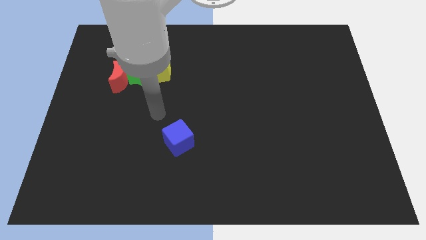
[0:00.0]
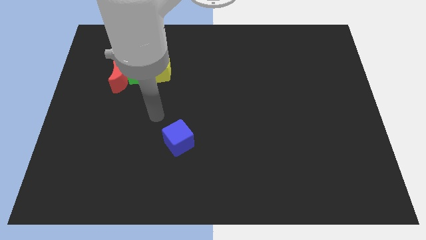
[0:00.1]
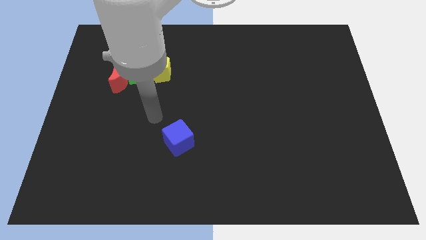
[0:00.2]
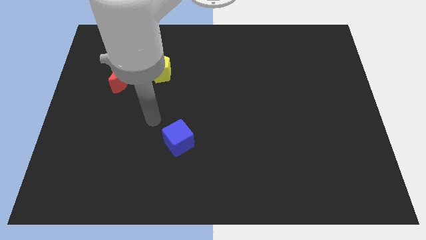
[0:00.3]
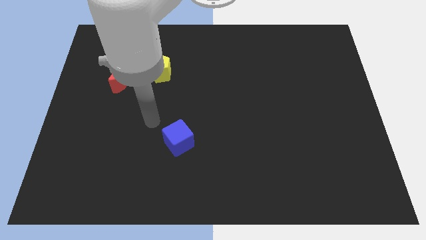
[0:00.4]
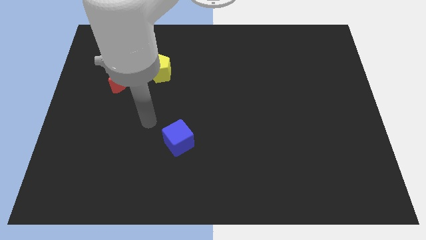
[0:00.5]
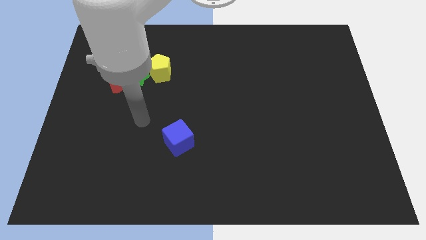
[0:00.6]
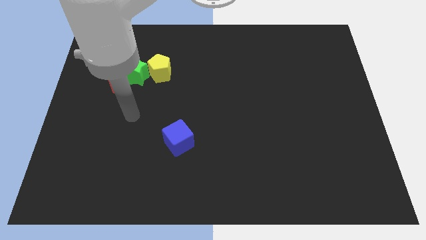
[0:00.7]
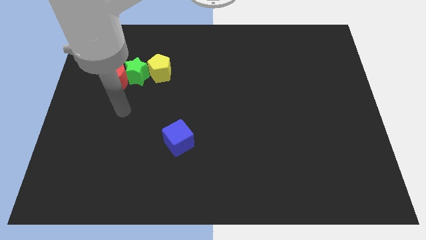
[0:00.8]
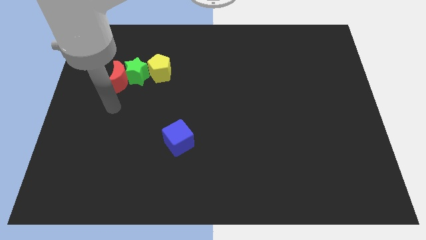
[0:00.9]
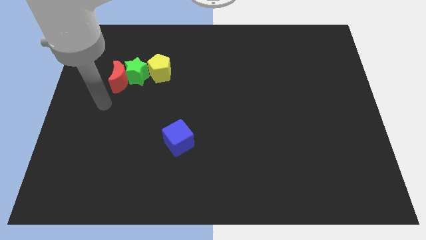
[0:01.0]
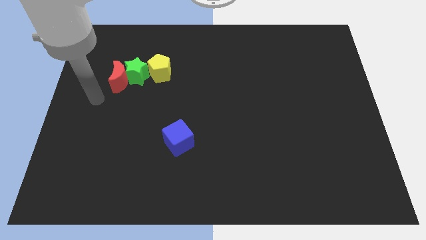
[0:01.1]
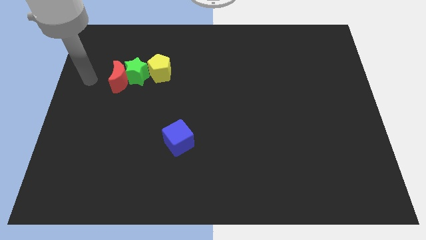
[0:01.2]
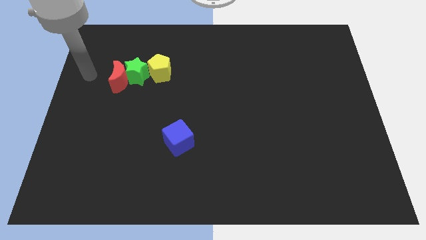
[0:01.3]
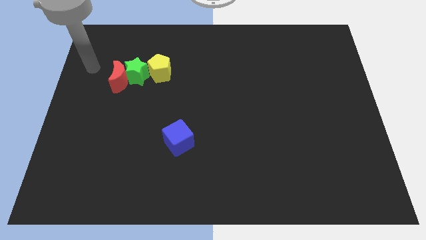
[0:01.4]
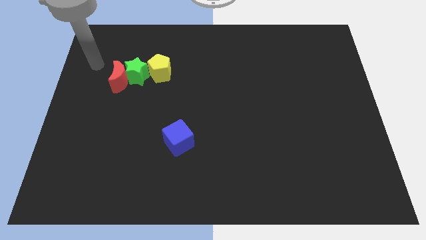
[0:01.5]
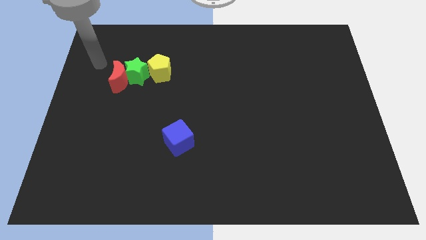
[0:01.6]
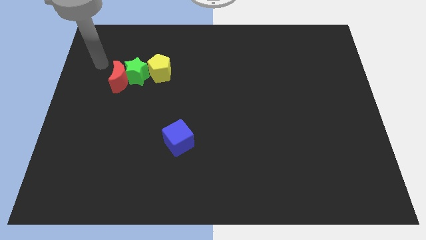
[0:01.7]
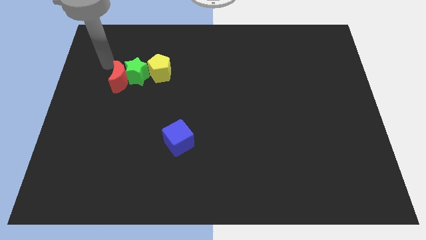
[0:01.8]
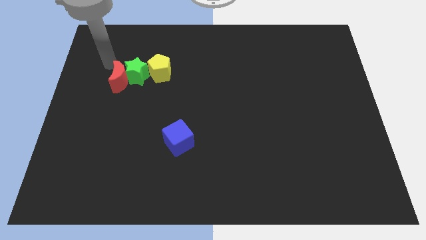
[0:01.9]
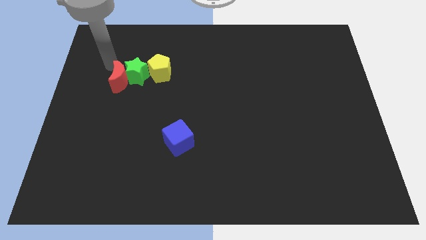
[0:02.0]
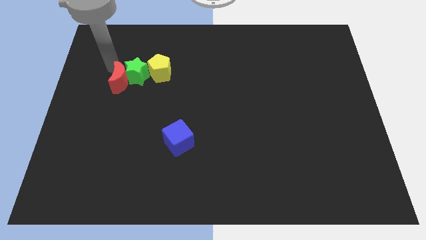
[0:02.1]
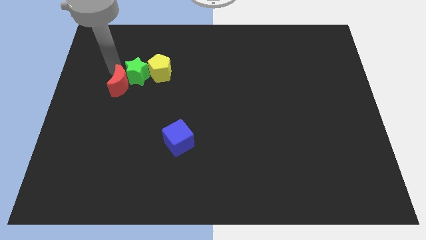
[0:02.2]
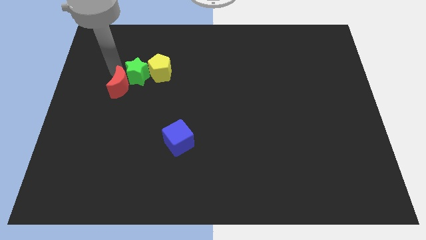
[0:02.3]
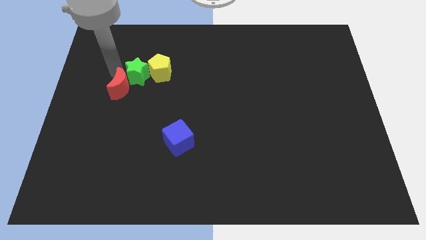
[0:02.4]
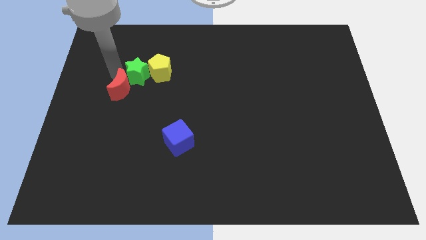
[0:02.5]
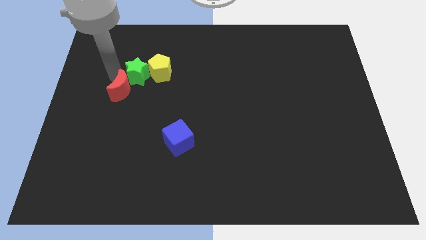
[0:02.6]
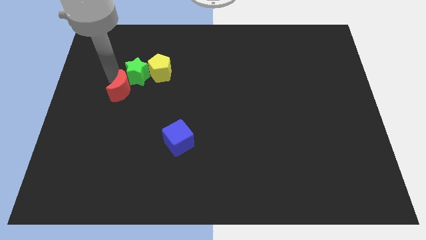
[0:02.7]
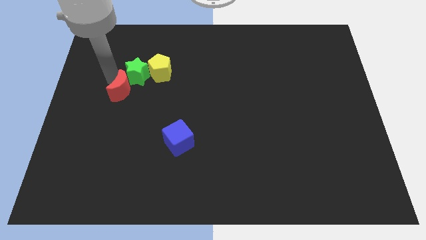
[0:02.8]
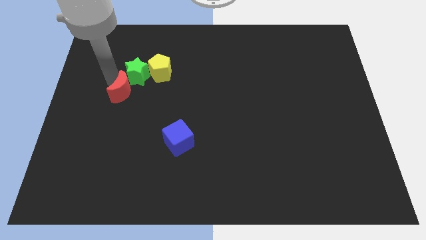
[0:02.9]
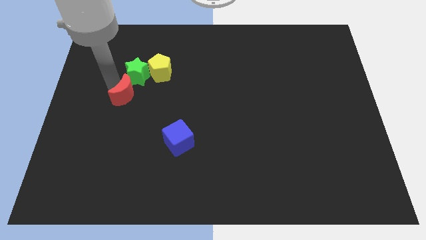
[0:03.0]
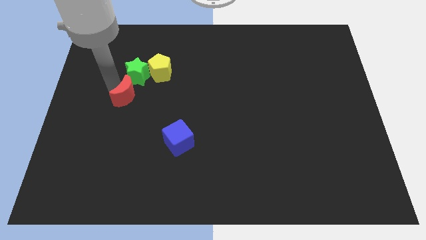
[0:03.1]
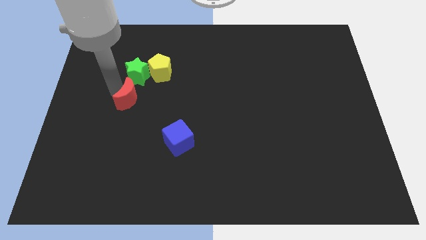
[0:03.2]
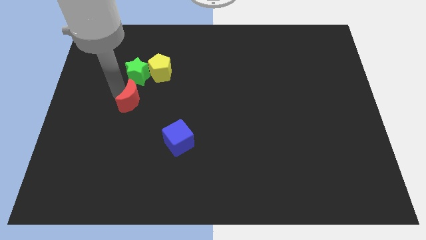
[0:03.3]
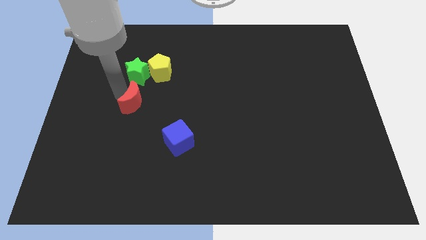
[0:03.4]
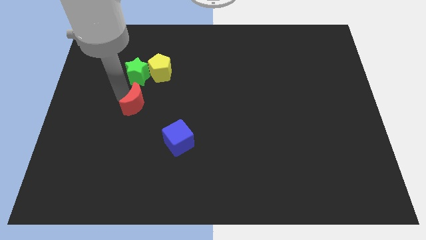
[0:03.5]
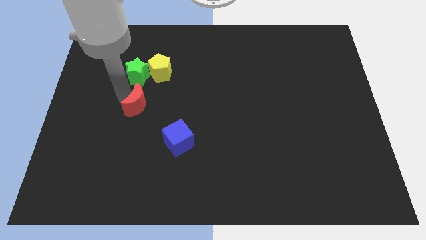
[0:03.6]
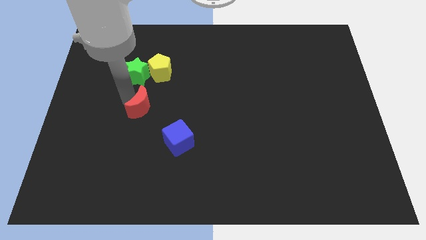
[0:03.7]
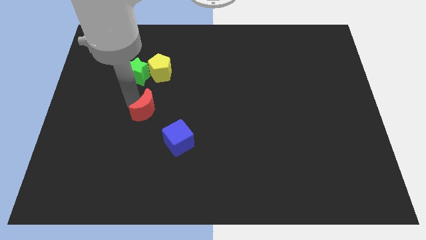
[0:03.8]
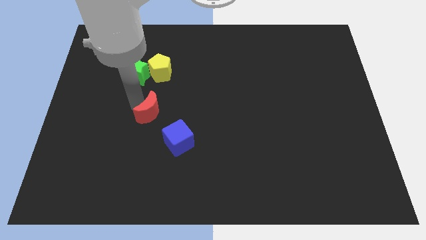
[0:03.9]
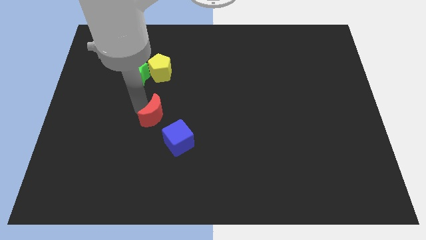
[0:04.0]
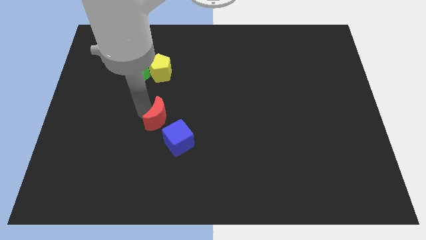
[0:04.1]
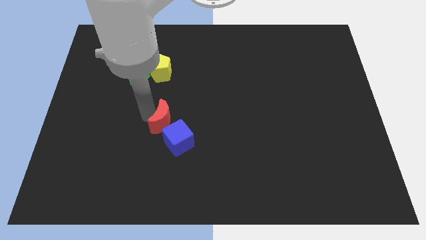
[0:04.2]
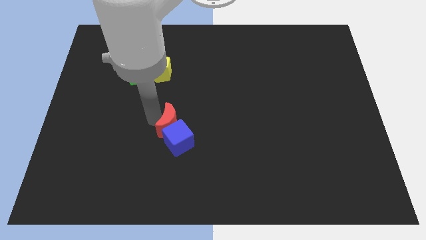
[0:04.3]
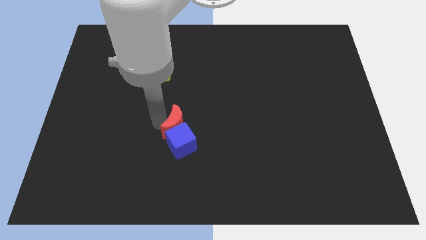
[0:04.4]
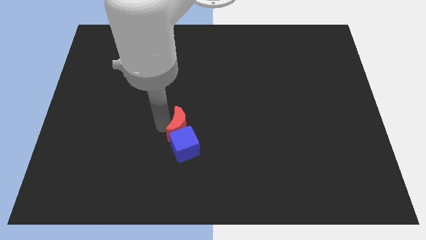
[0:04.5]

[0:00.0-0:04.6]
move the moon towards the cube

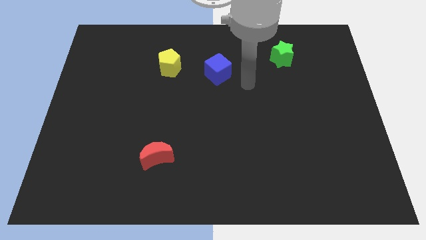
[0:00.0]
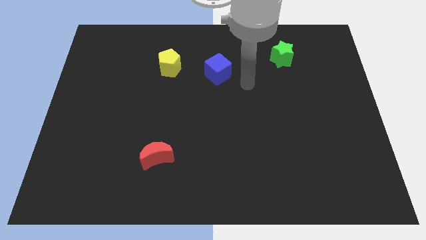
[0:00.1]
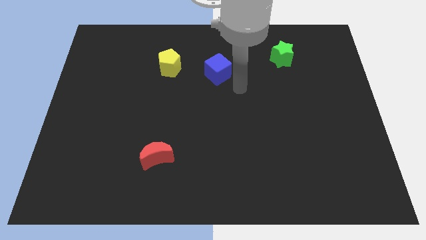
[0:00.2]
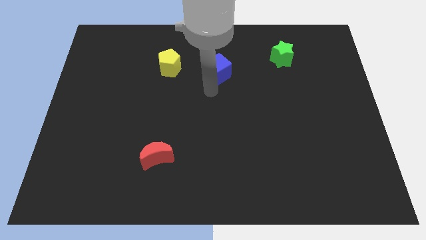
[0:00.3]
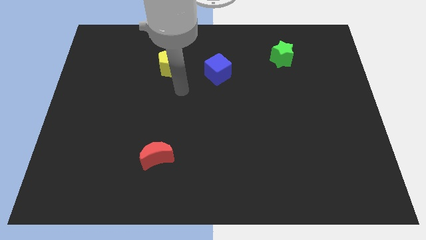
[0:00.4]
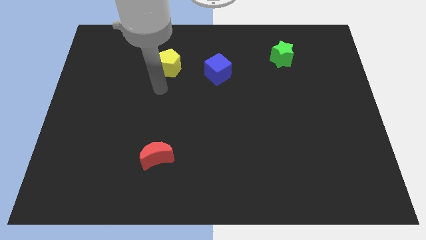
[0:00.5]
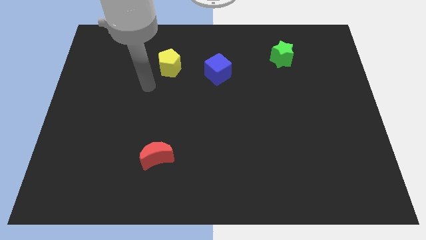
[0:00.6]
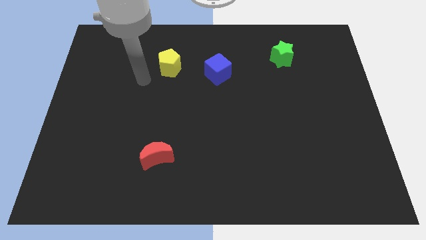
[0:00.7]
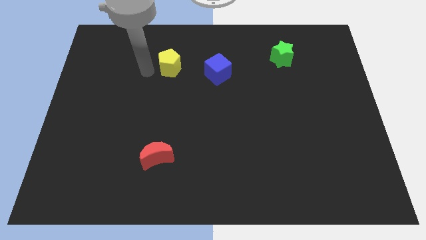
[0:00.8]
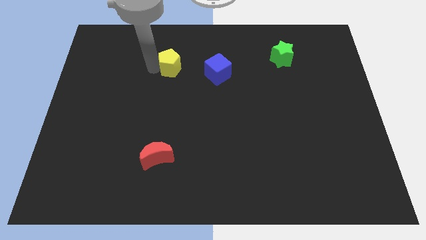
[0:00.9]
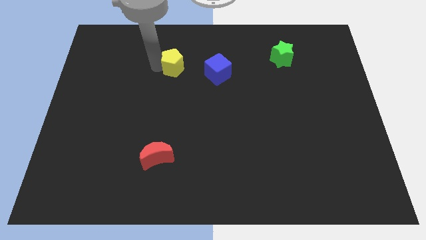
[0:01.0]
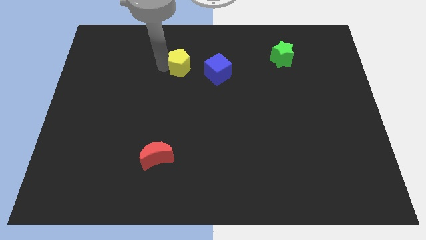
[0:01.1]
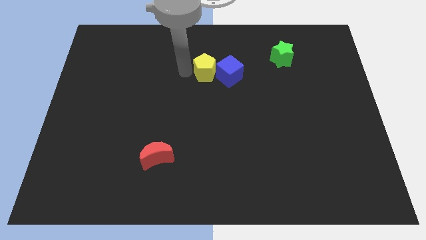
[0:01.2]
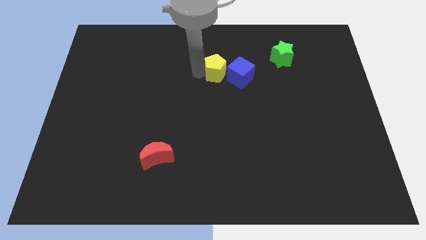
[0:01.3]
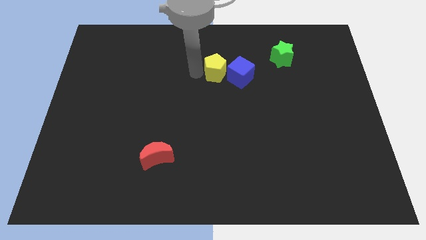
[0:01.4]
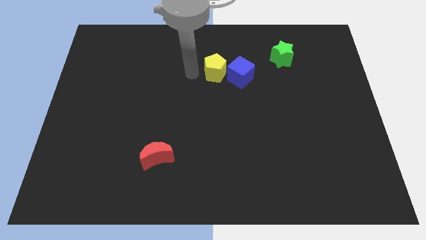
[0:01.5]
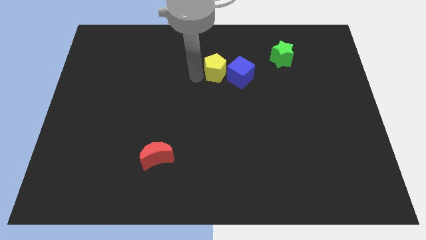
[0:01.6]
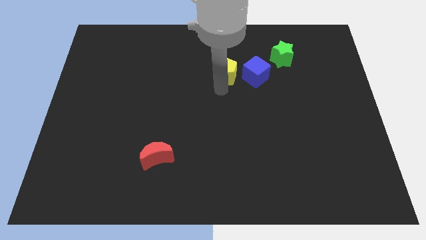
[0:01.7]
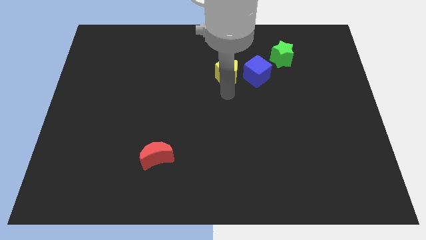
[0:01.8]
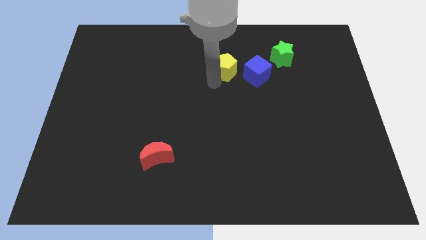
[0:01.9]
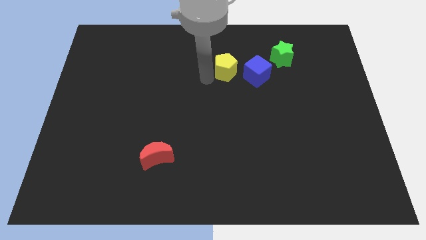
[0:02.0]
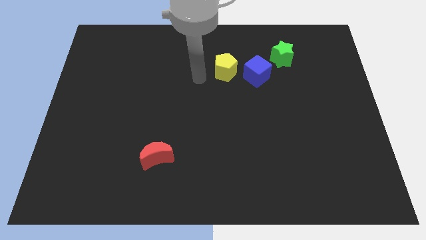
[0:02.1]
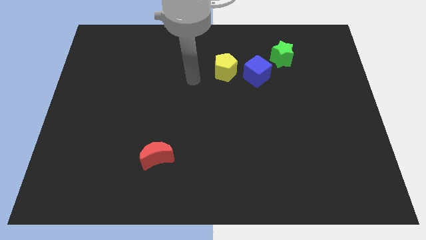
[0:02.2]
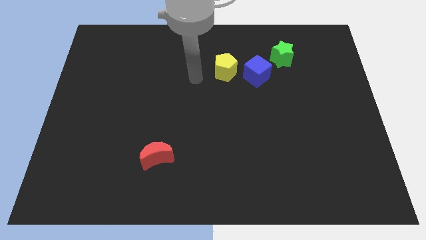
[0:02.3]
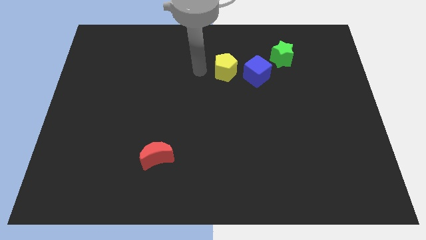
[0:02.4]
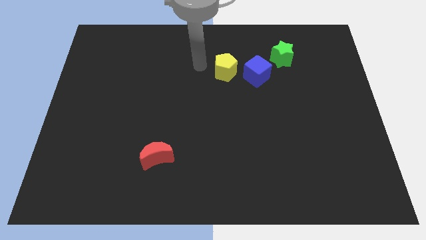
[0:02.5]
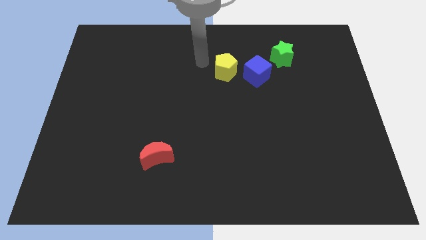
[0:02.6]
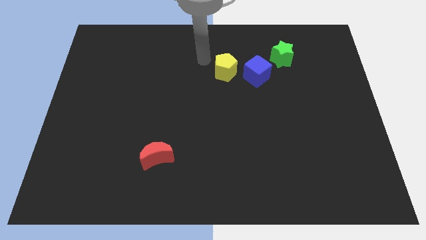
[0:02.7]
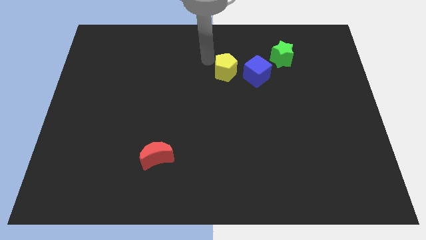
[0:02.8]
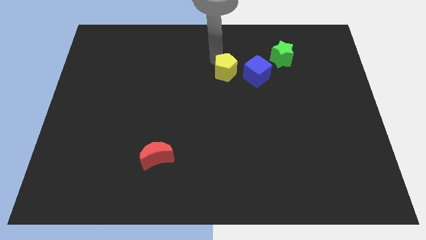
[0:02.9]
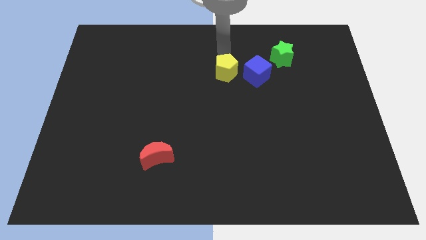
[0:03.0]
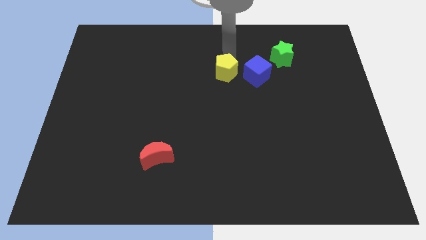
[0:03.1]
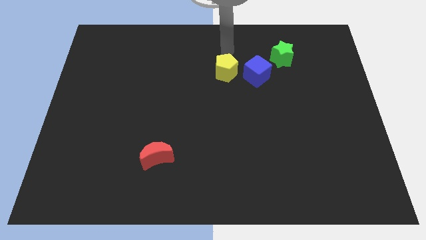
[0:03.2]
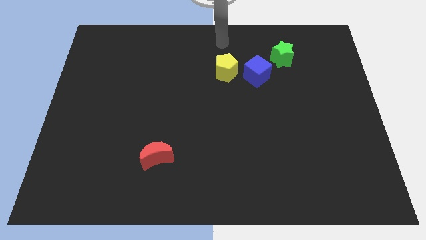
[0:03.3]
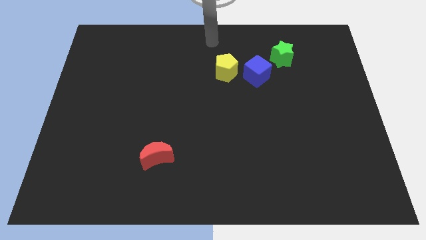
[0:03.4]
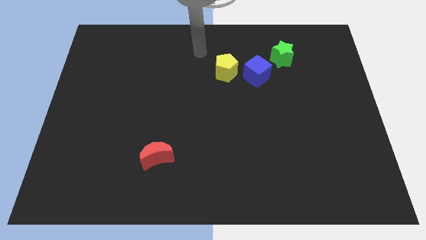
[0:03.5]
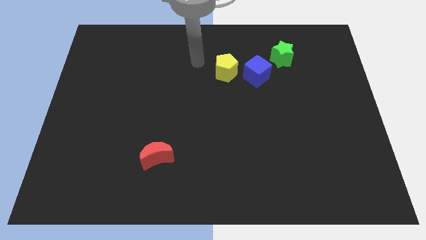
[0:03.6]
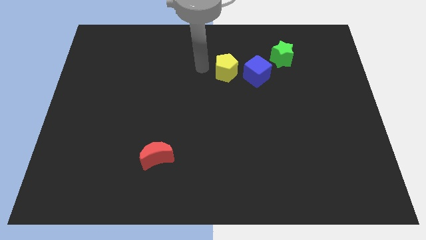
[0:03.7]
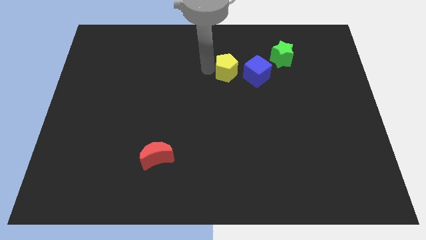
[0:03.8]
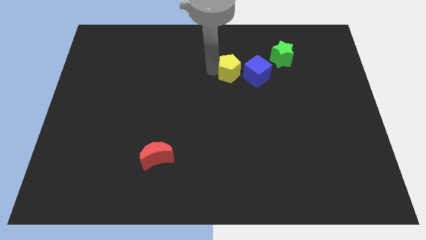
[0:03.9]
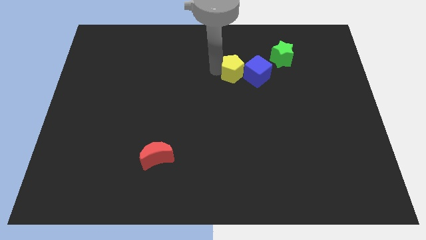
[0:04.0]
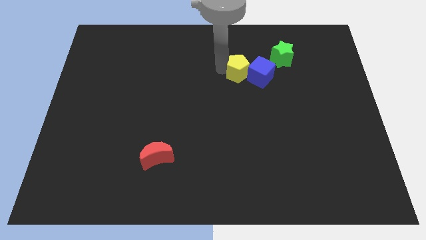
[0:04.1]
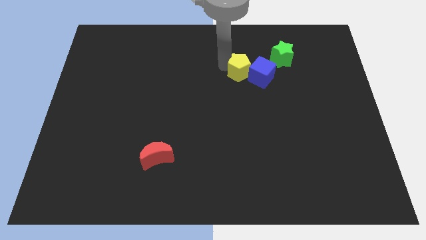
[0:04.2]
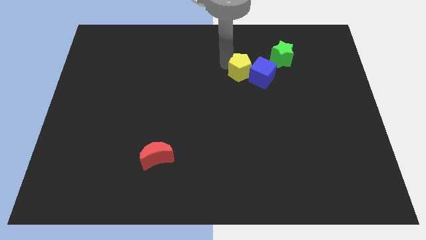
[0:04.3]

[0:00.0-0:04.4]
slide the yellow block next to the blue block
